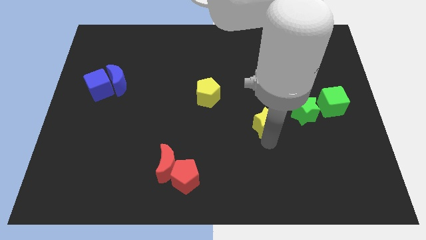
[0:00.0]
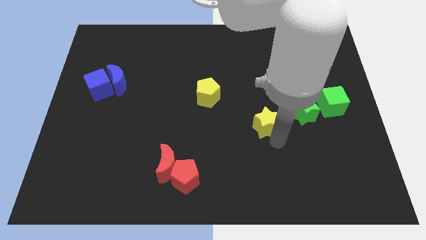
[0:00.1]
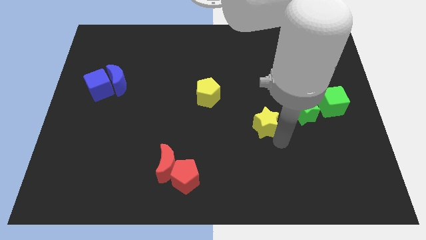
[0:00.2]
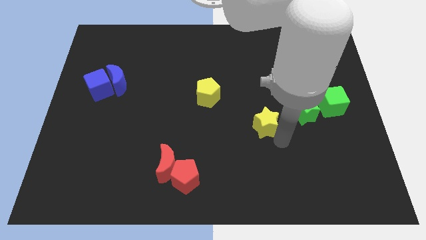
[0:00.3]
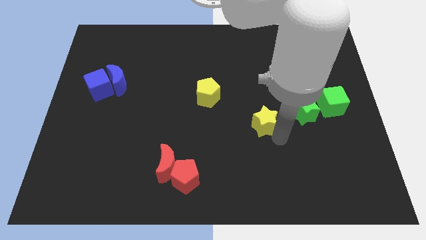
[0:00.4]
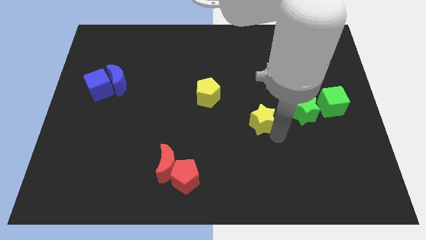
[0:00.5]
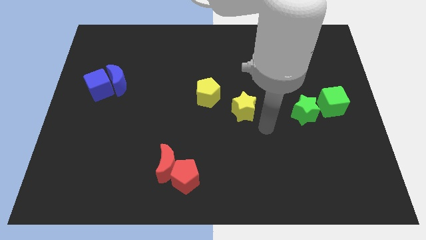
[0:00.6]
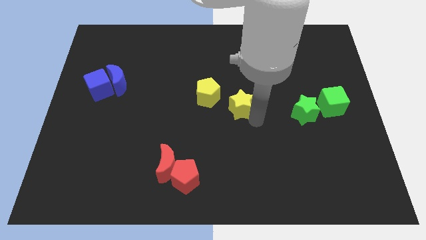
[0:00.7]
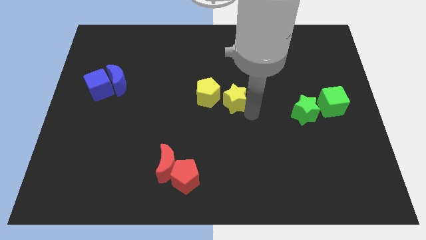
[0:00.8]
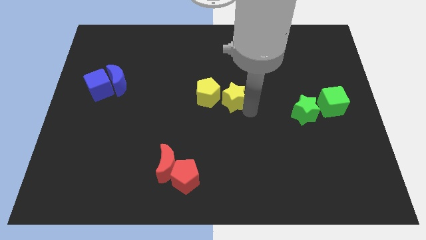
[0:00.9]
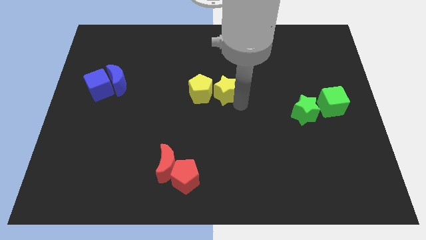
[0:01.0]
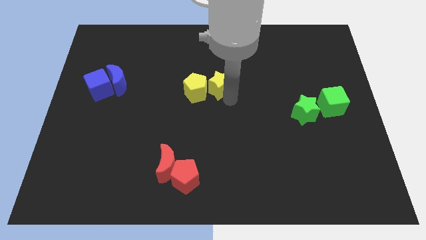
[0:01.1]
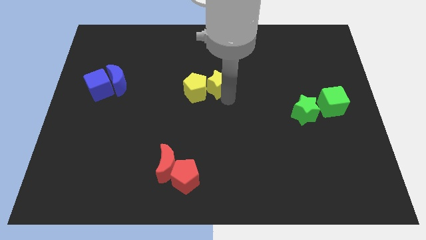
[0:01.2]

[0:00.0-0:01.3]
push the yellow blocks to the to side

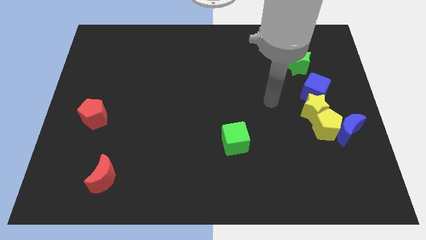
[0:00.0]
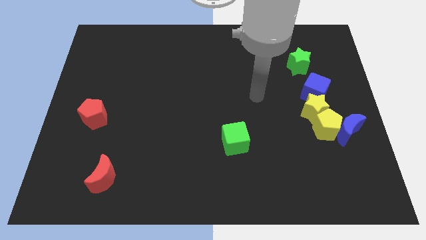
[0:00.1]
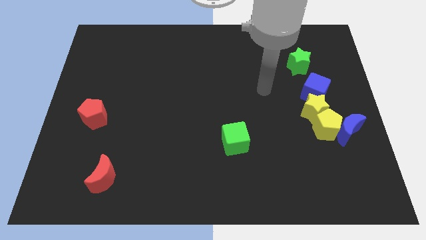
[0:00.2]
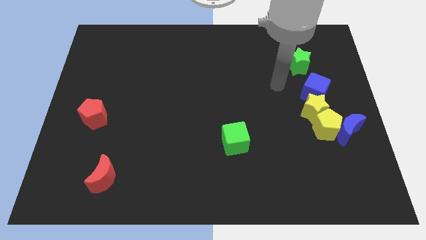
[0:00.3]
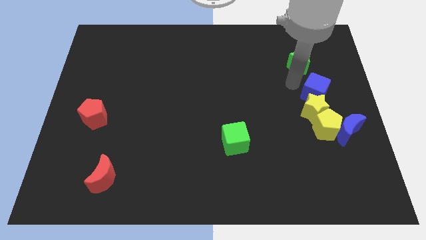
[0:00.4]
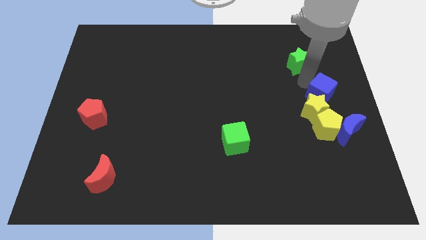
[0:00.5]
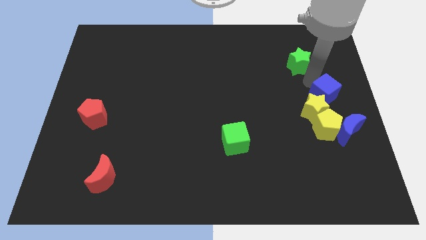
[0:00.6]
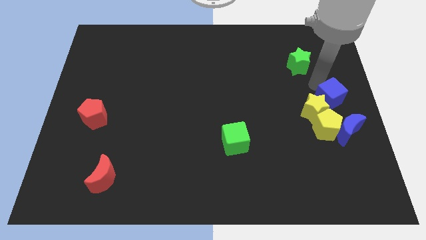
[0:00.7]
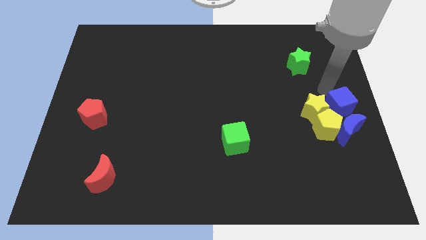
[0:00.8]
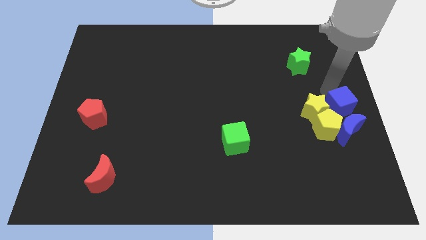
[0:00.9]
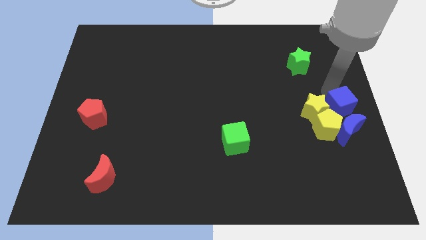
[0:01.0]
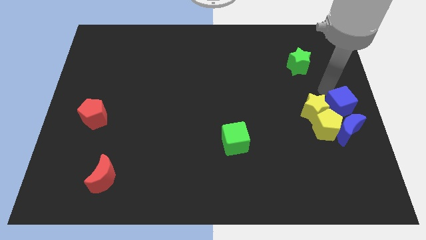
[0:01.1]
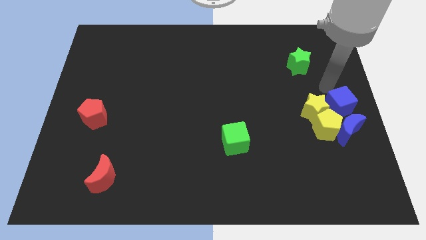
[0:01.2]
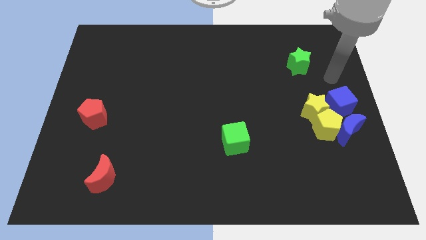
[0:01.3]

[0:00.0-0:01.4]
place the blue cube to the top of blue moon

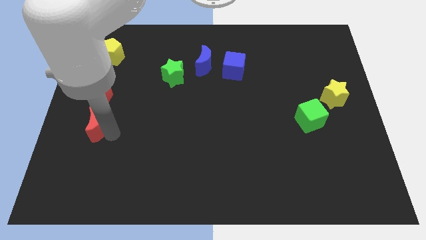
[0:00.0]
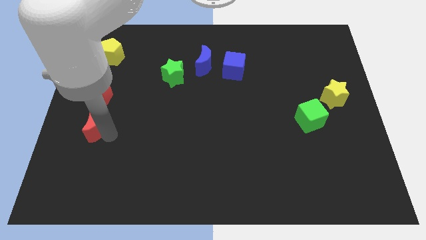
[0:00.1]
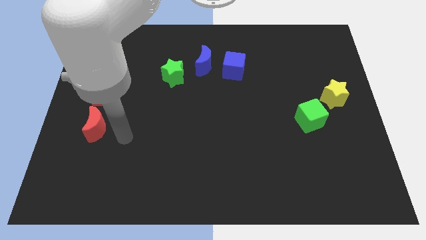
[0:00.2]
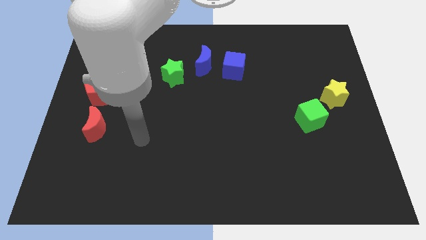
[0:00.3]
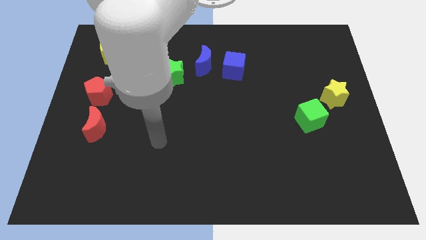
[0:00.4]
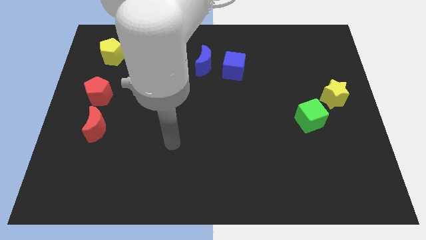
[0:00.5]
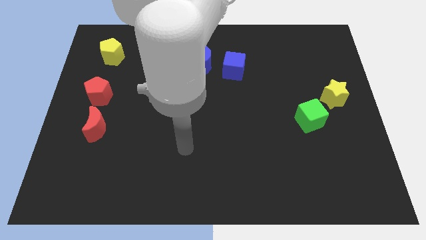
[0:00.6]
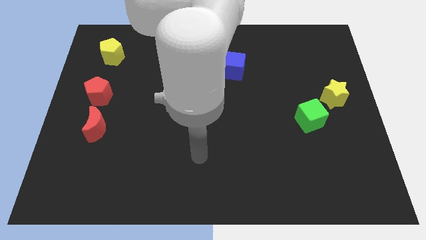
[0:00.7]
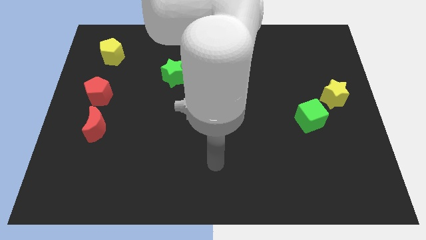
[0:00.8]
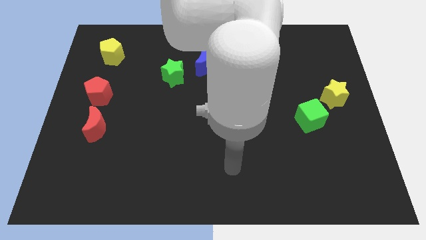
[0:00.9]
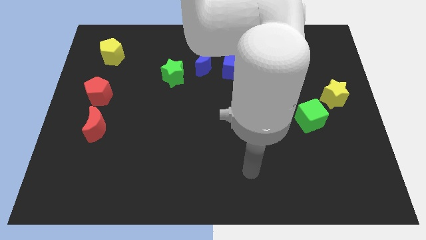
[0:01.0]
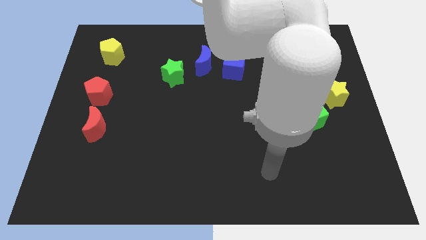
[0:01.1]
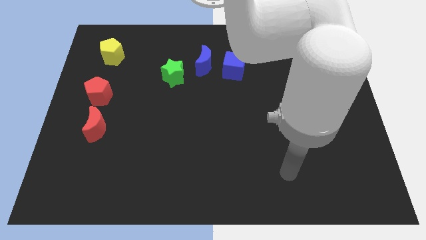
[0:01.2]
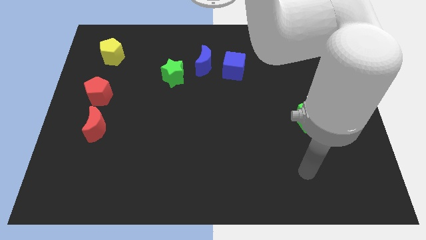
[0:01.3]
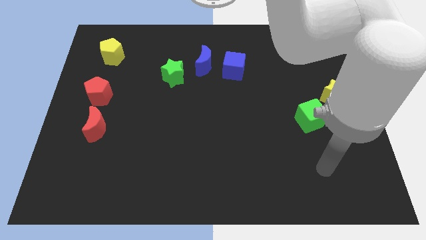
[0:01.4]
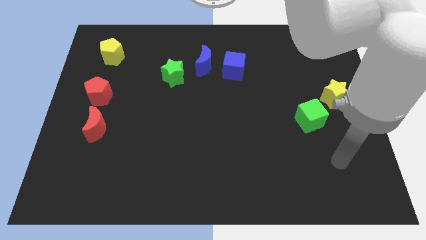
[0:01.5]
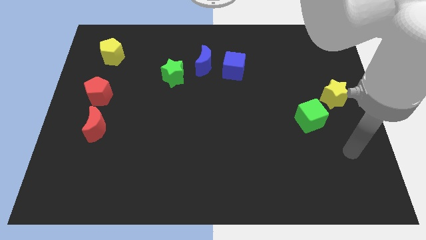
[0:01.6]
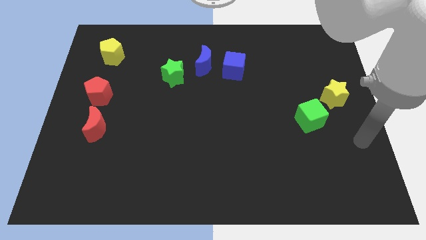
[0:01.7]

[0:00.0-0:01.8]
move your arm towards the right side of the board

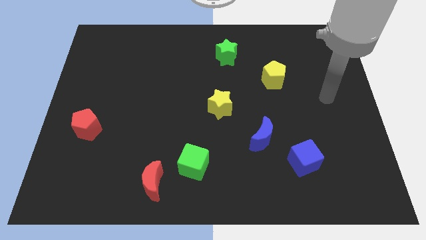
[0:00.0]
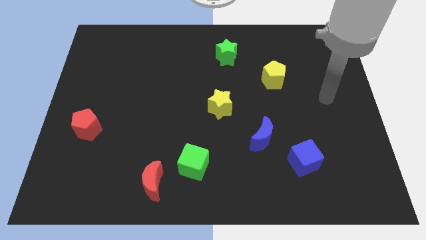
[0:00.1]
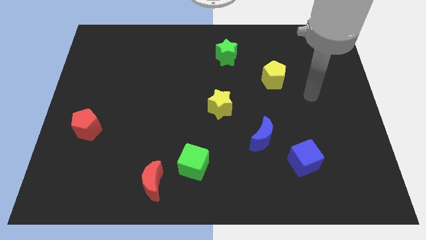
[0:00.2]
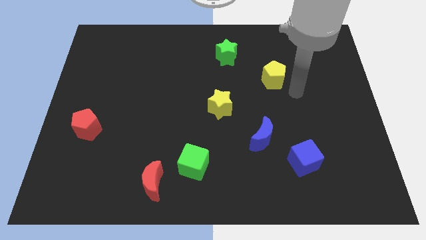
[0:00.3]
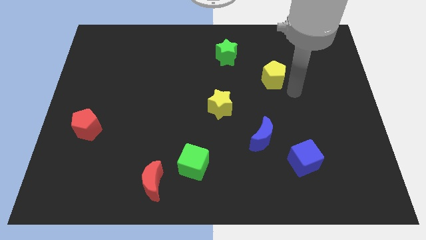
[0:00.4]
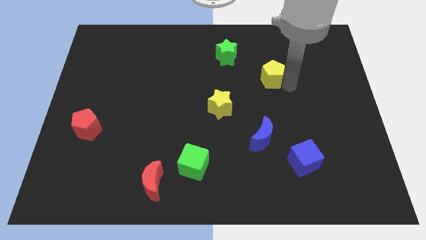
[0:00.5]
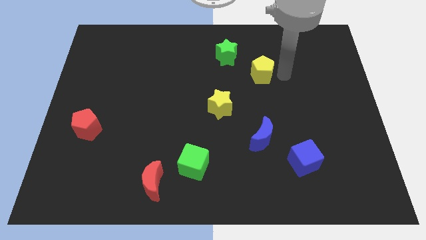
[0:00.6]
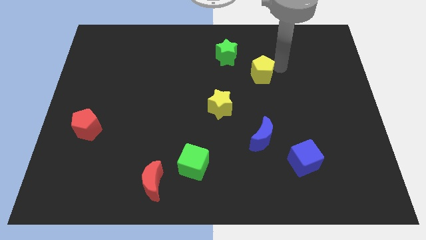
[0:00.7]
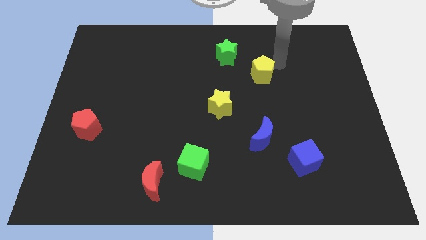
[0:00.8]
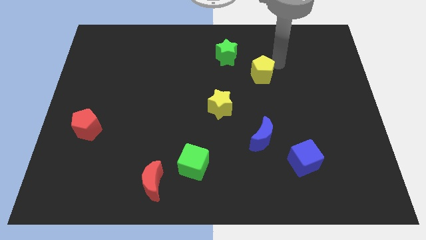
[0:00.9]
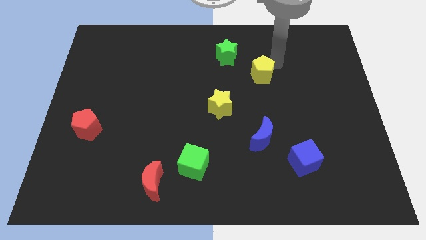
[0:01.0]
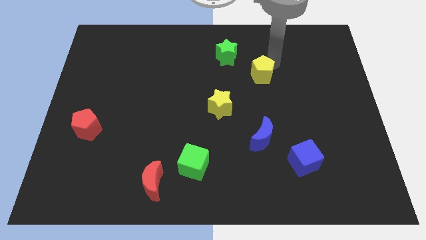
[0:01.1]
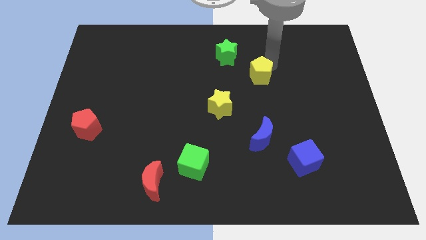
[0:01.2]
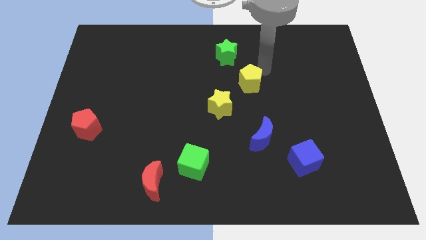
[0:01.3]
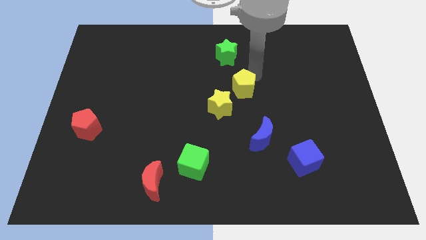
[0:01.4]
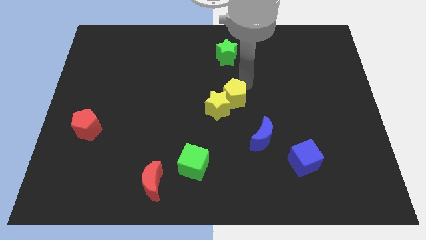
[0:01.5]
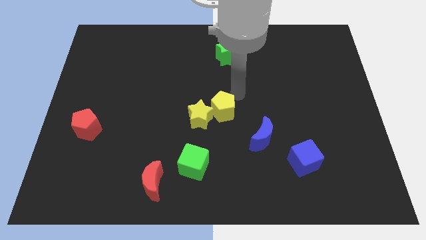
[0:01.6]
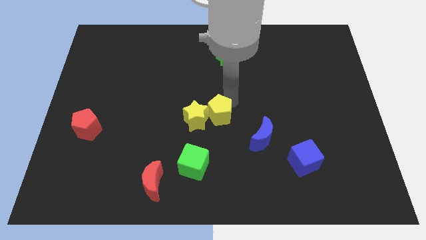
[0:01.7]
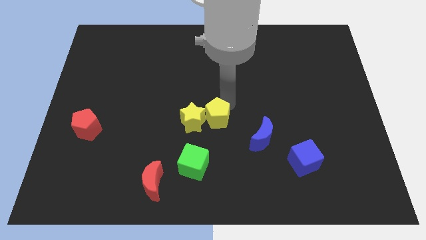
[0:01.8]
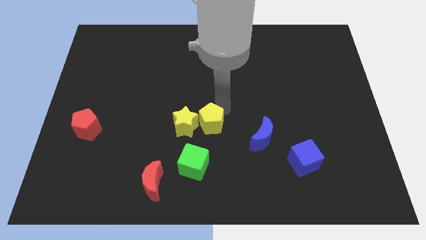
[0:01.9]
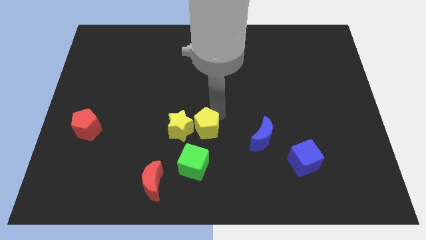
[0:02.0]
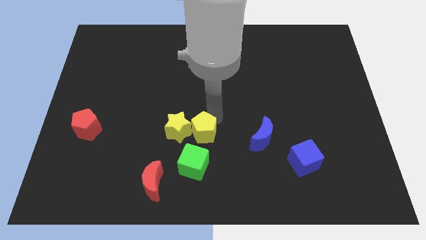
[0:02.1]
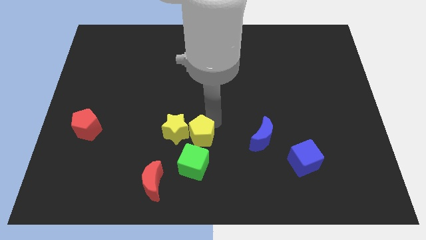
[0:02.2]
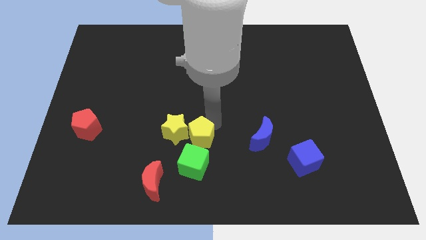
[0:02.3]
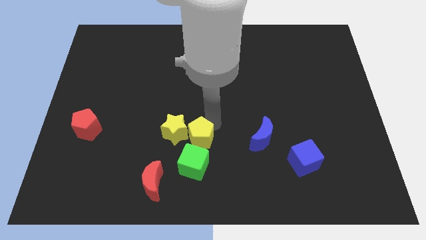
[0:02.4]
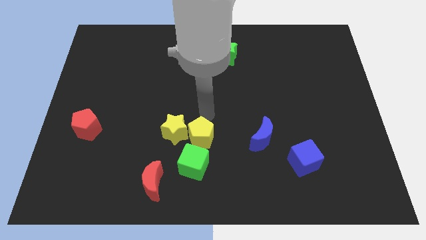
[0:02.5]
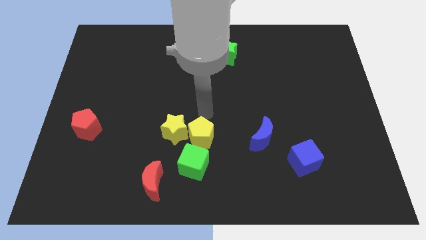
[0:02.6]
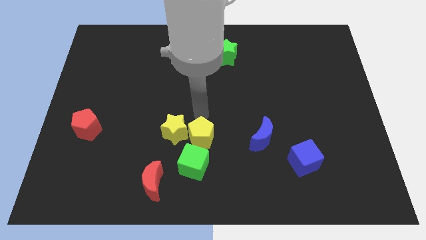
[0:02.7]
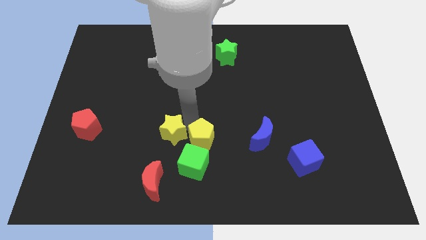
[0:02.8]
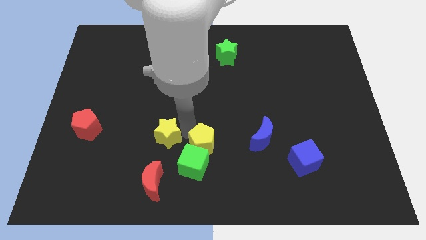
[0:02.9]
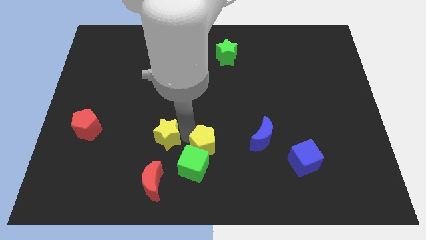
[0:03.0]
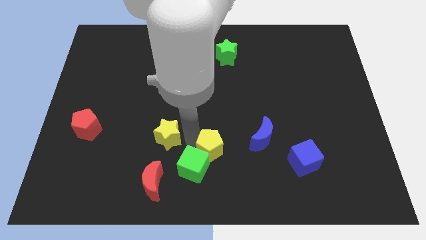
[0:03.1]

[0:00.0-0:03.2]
place yellow pentagon to the top of green cube

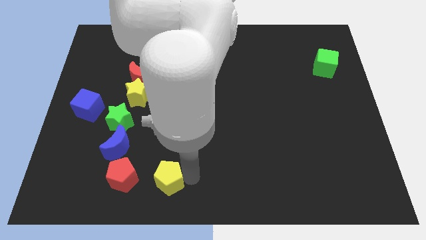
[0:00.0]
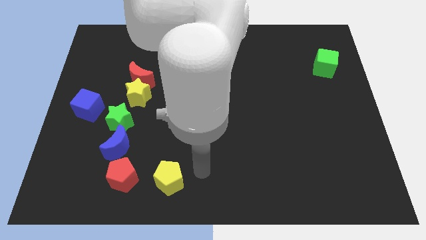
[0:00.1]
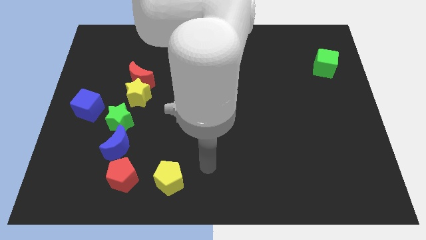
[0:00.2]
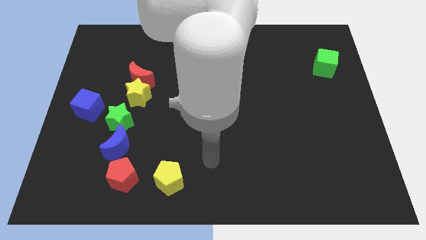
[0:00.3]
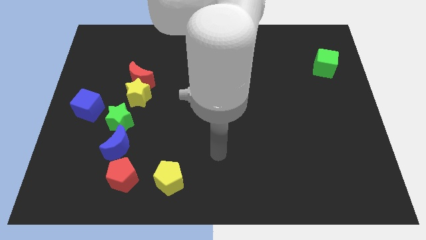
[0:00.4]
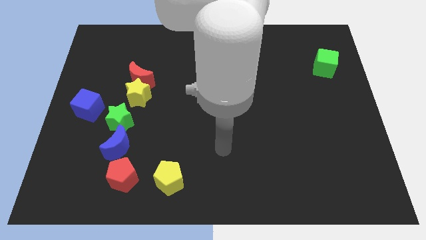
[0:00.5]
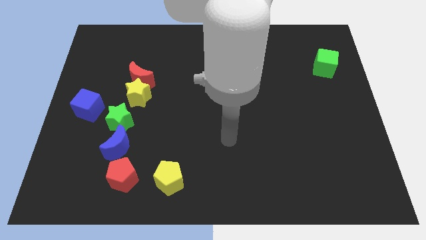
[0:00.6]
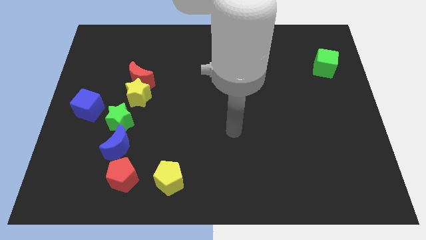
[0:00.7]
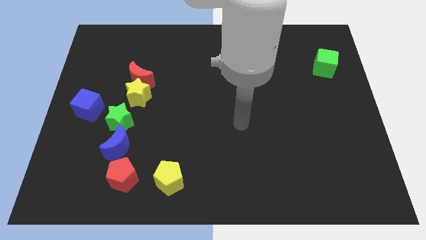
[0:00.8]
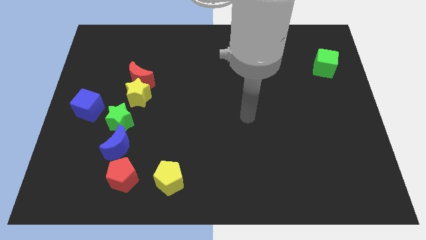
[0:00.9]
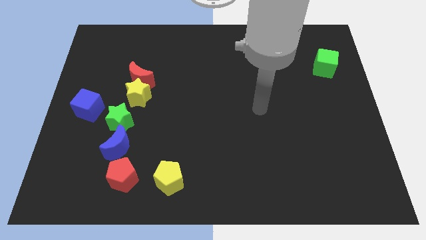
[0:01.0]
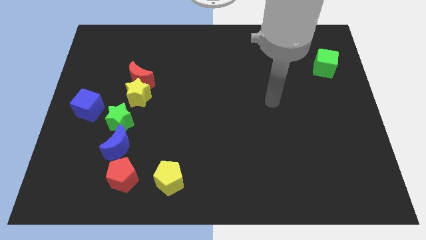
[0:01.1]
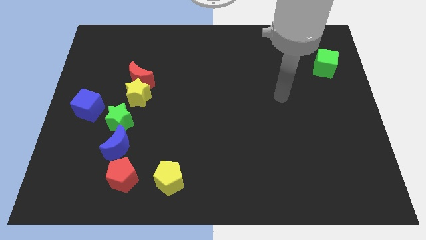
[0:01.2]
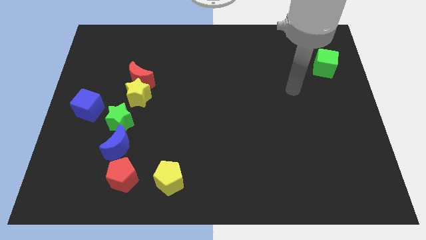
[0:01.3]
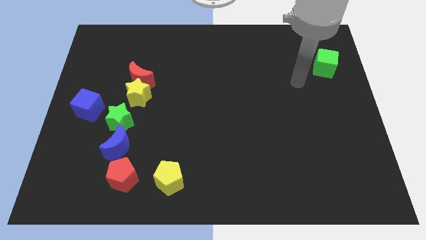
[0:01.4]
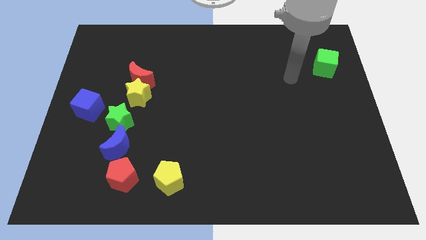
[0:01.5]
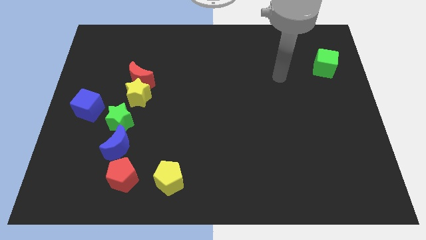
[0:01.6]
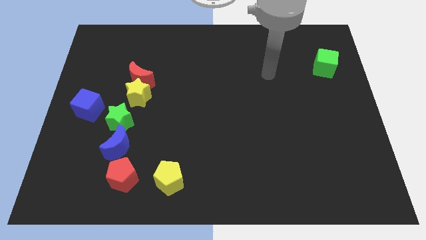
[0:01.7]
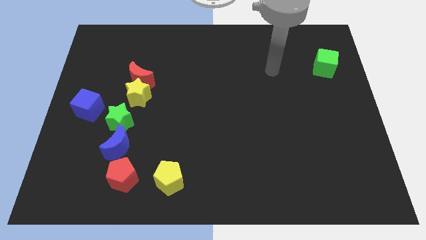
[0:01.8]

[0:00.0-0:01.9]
move your arm away from the yellow pentagon
